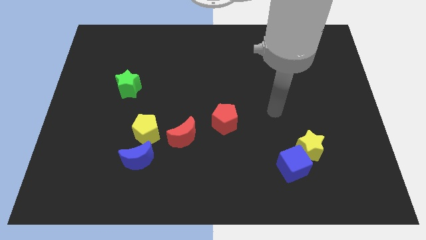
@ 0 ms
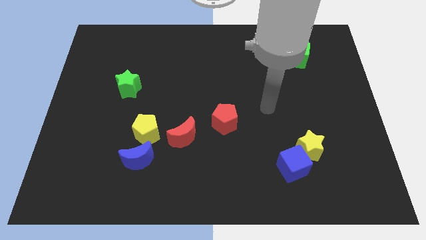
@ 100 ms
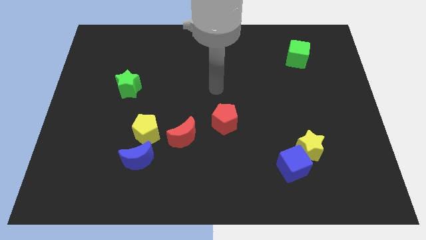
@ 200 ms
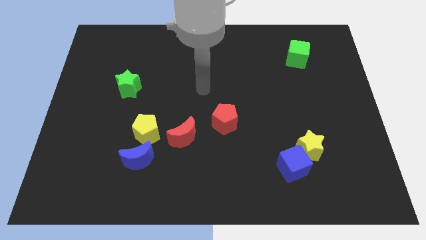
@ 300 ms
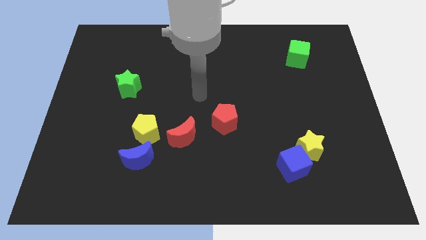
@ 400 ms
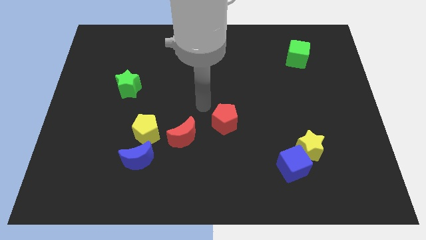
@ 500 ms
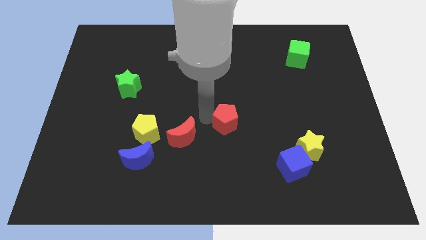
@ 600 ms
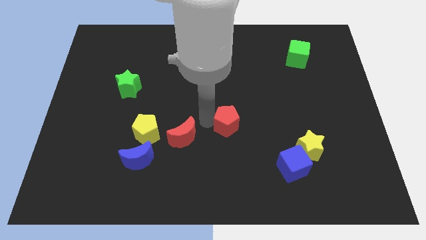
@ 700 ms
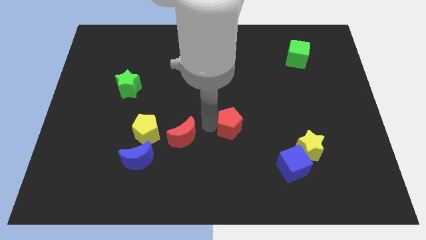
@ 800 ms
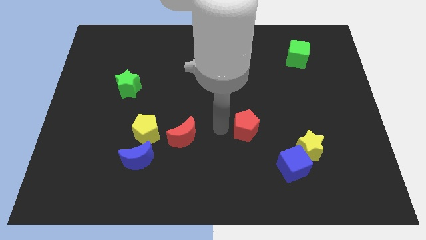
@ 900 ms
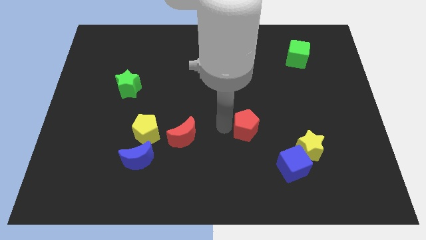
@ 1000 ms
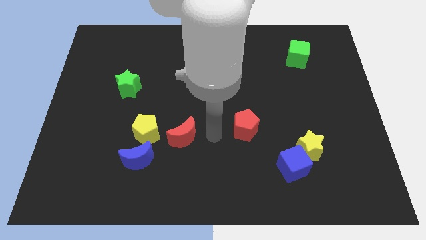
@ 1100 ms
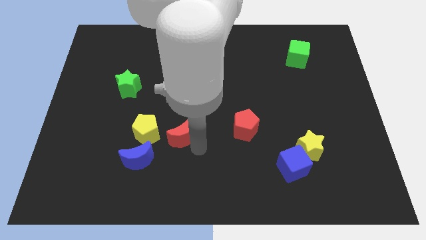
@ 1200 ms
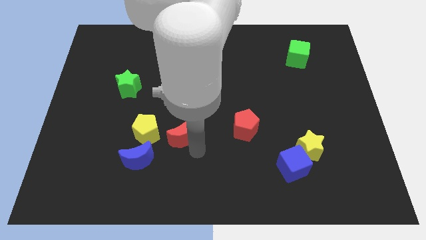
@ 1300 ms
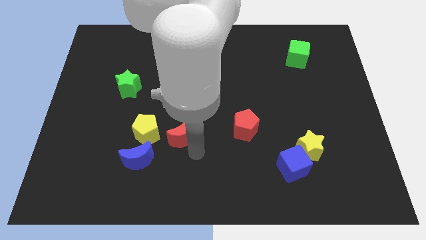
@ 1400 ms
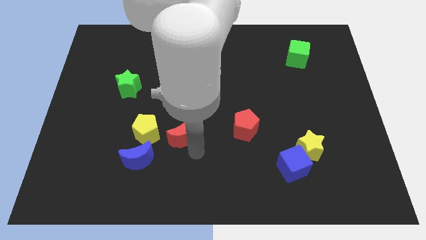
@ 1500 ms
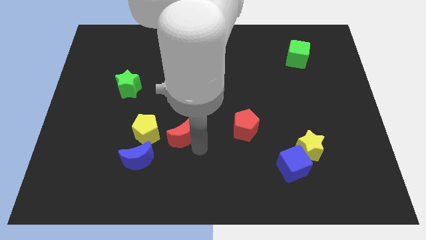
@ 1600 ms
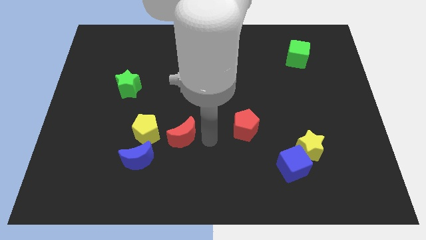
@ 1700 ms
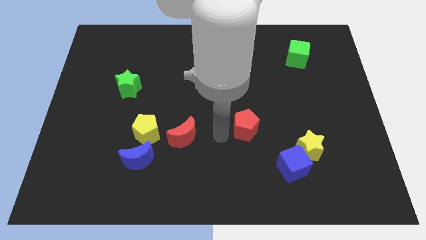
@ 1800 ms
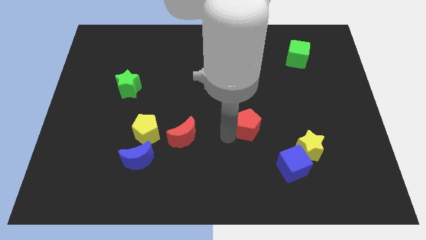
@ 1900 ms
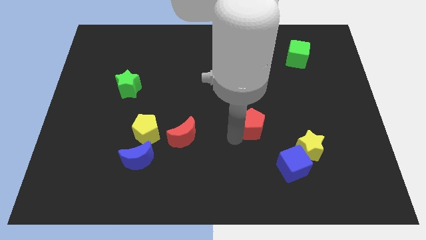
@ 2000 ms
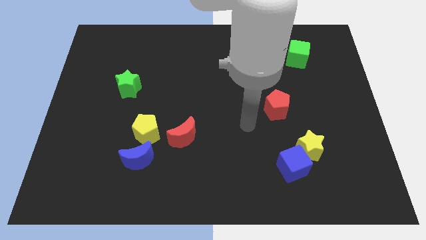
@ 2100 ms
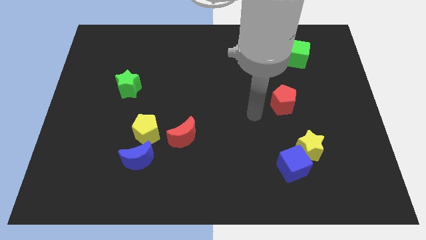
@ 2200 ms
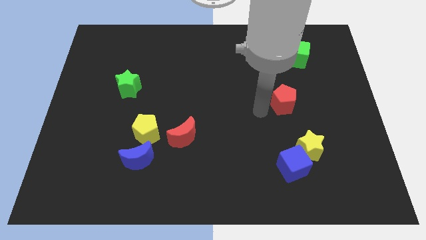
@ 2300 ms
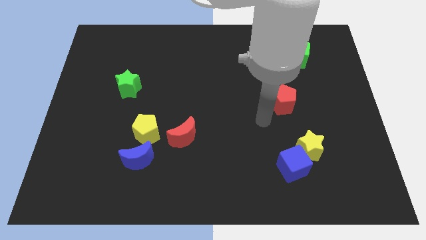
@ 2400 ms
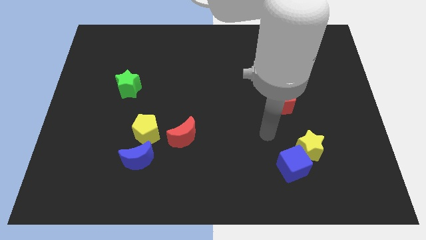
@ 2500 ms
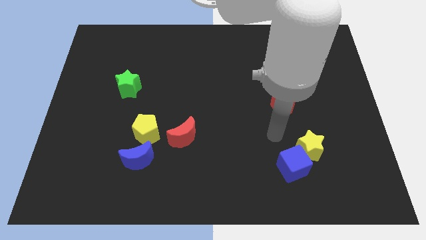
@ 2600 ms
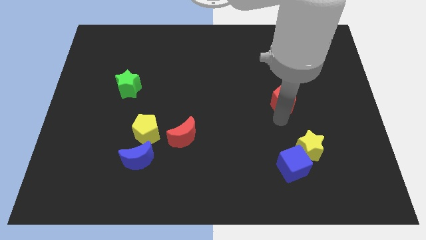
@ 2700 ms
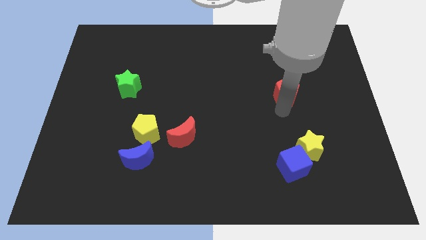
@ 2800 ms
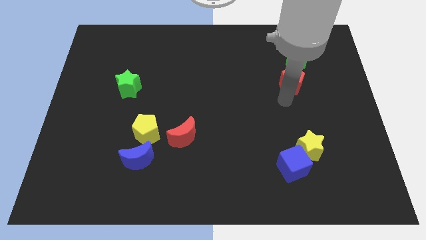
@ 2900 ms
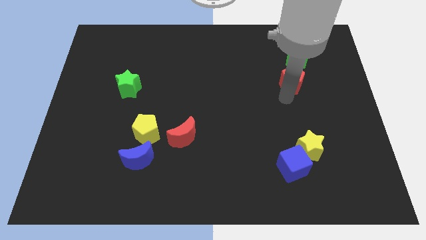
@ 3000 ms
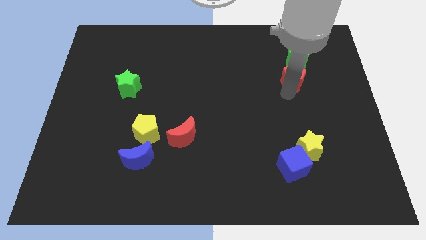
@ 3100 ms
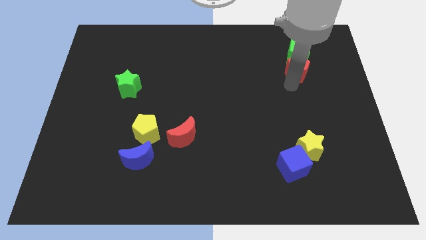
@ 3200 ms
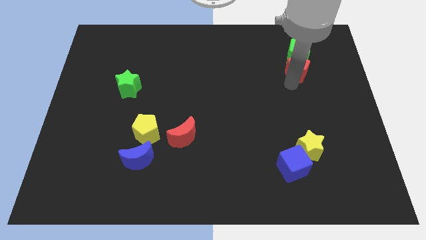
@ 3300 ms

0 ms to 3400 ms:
put the red pentagon towards the green cube

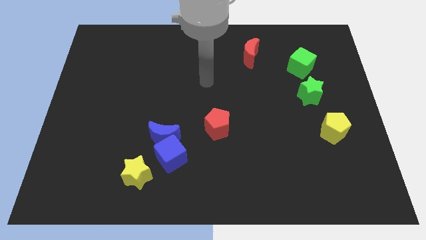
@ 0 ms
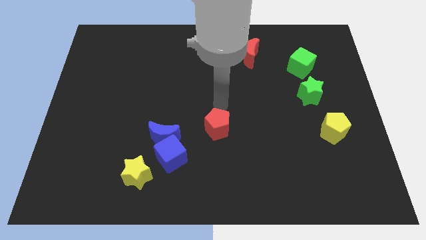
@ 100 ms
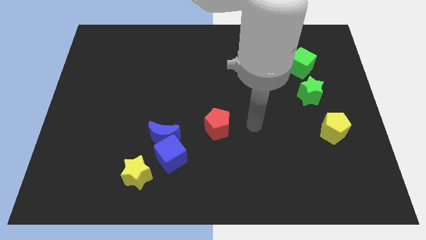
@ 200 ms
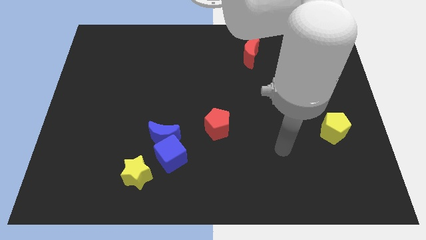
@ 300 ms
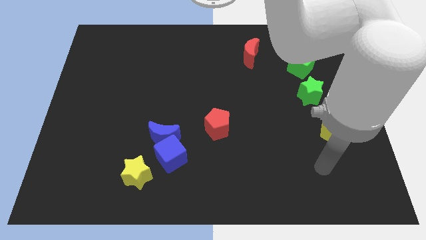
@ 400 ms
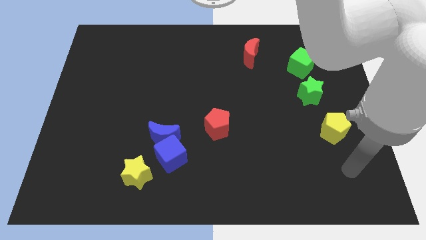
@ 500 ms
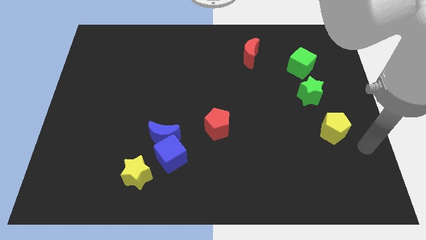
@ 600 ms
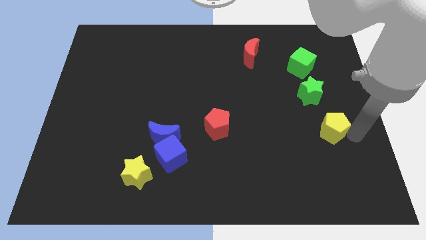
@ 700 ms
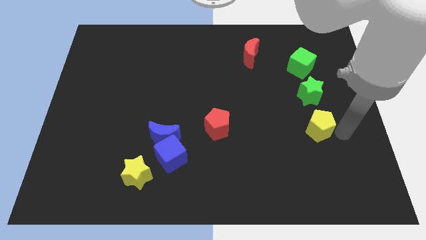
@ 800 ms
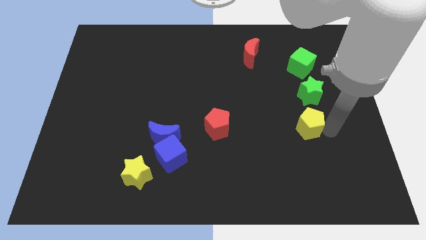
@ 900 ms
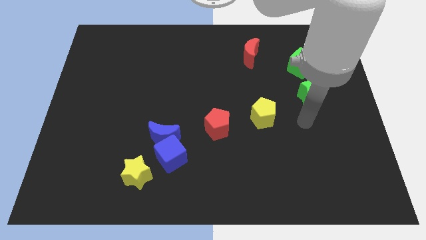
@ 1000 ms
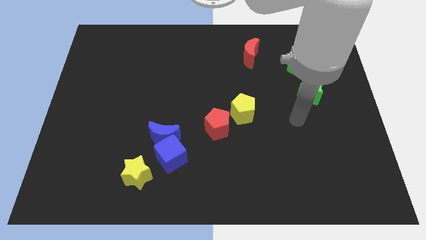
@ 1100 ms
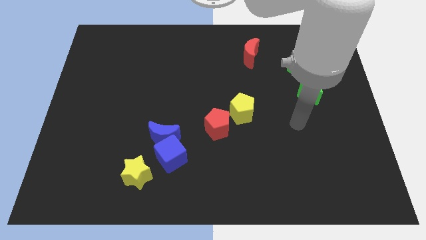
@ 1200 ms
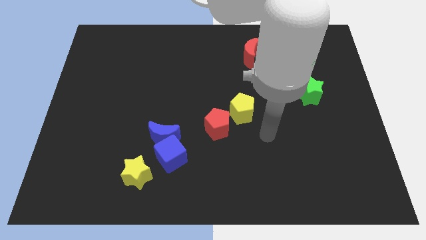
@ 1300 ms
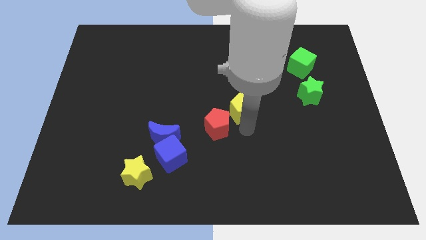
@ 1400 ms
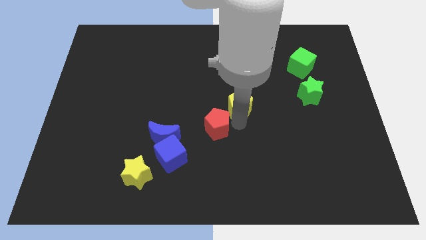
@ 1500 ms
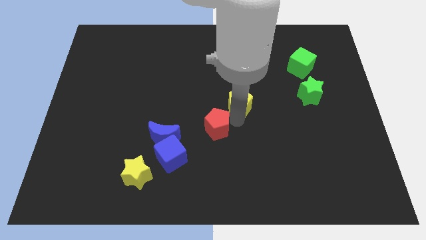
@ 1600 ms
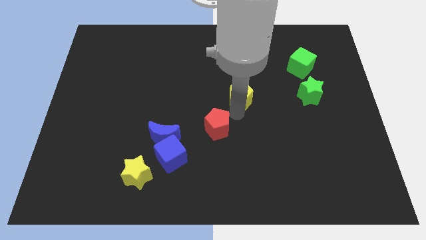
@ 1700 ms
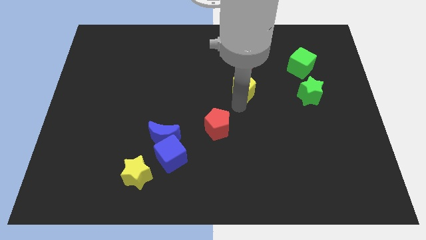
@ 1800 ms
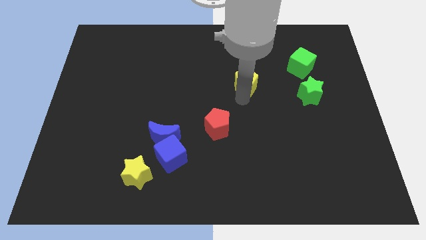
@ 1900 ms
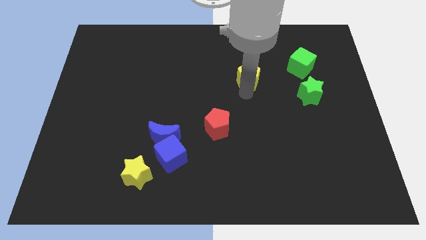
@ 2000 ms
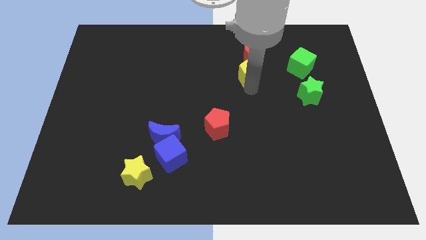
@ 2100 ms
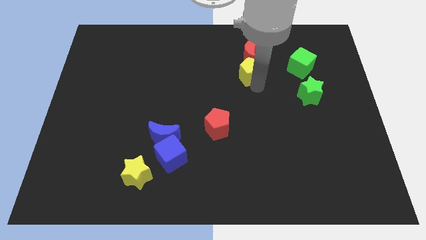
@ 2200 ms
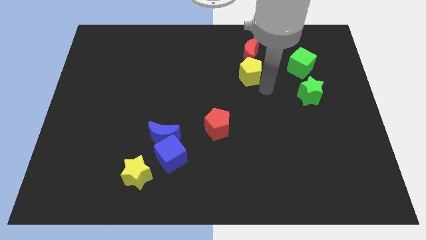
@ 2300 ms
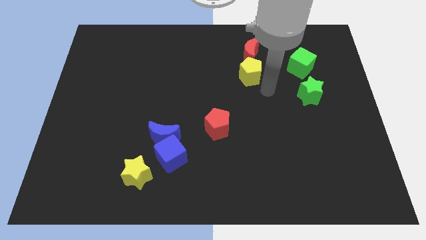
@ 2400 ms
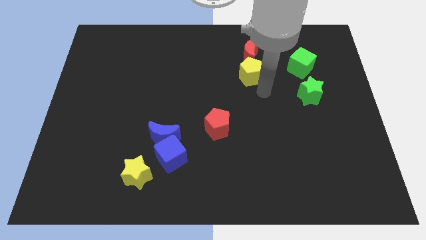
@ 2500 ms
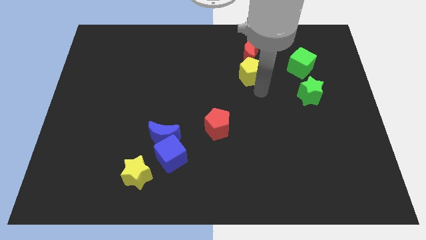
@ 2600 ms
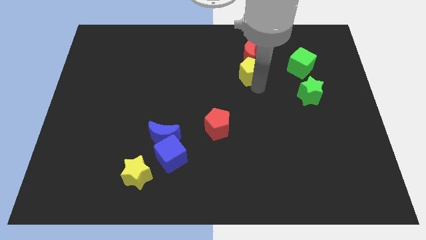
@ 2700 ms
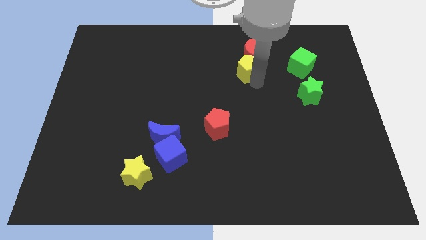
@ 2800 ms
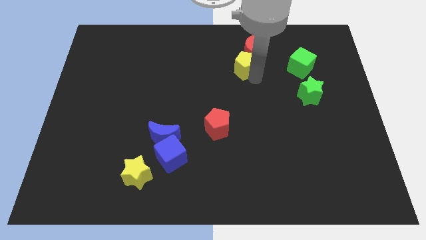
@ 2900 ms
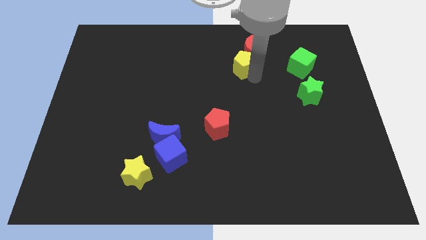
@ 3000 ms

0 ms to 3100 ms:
put the yellow pentagon close to the red moon

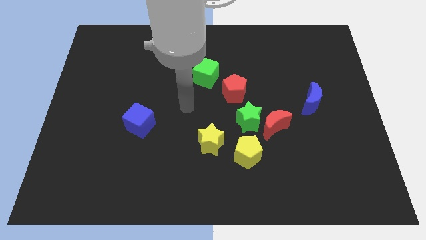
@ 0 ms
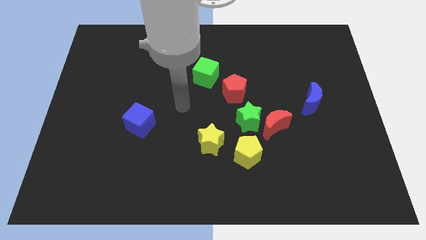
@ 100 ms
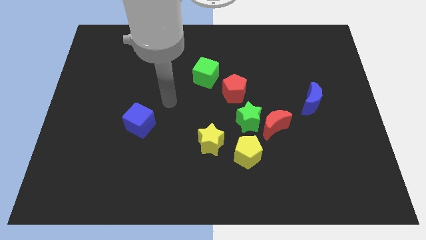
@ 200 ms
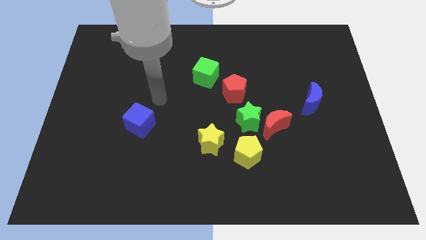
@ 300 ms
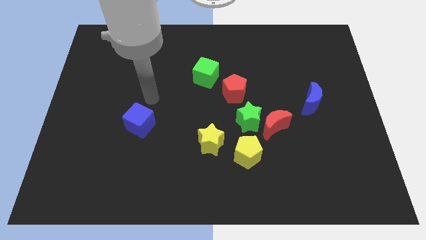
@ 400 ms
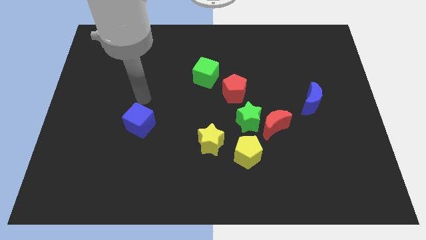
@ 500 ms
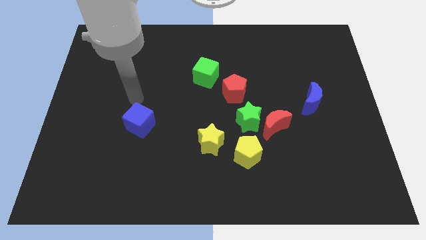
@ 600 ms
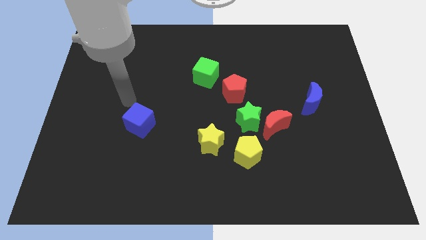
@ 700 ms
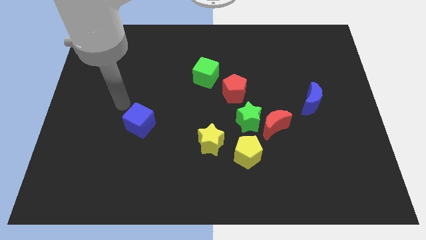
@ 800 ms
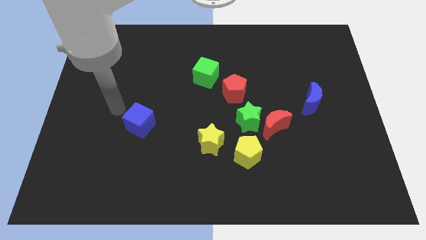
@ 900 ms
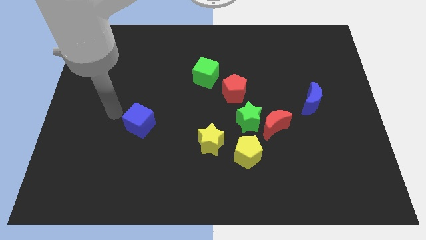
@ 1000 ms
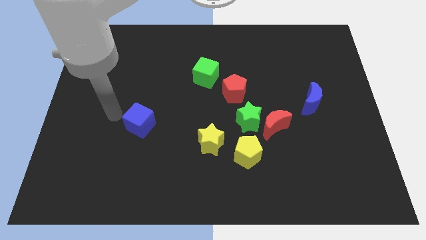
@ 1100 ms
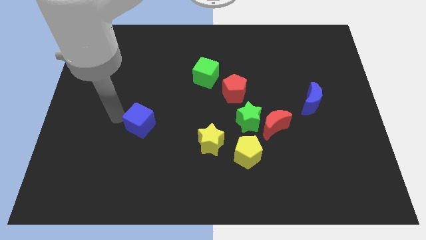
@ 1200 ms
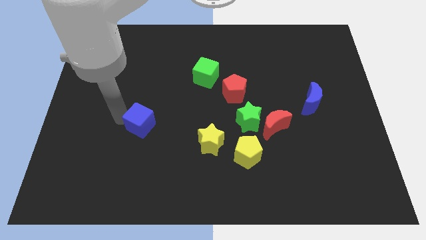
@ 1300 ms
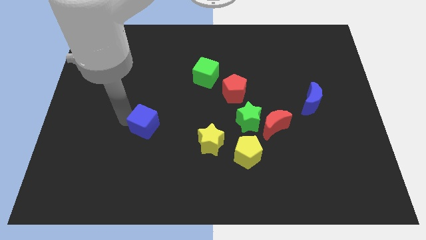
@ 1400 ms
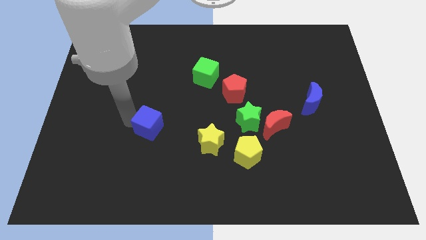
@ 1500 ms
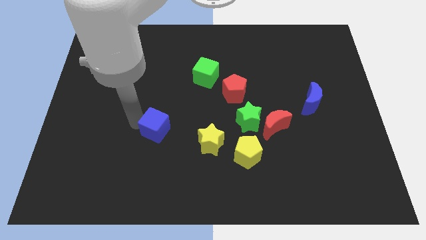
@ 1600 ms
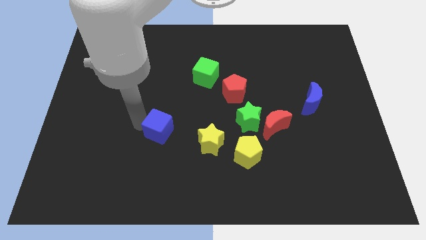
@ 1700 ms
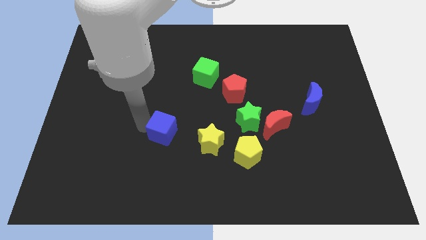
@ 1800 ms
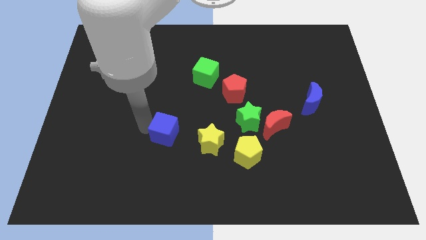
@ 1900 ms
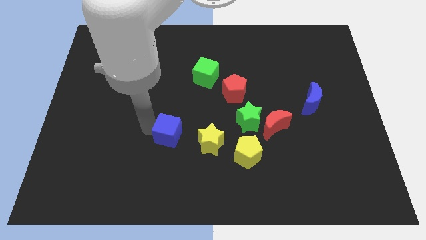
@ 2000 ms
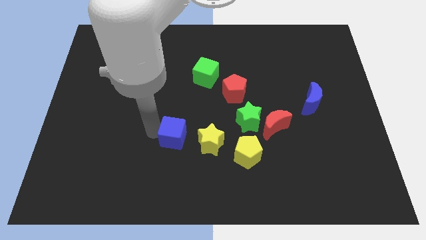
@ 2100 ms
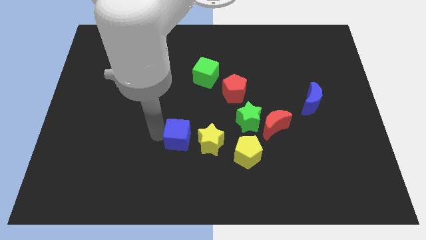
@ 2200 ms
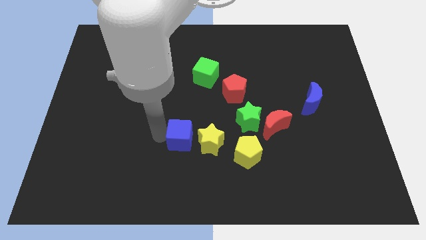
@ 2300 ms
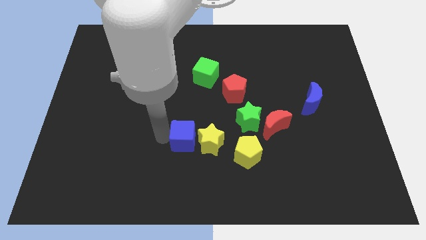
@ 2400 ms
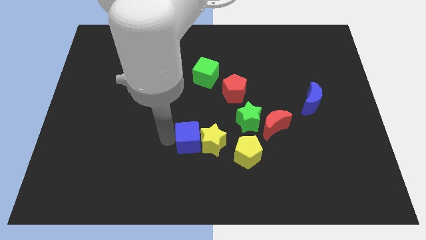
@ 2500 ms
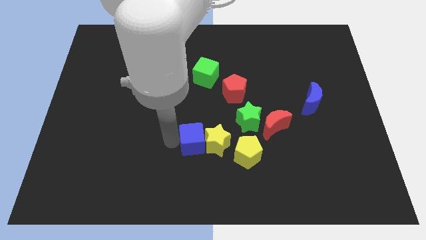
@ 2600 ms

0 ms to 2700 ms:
put the blue cube next to the yellow star
